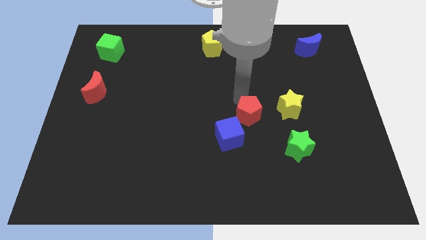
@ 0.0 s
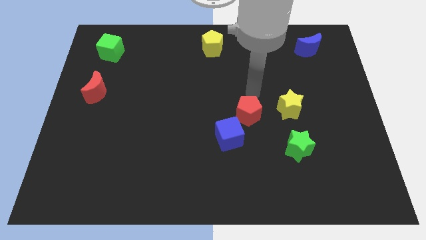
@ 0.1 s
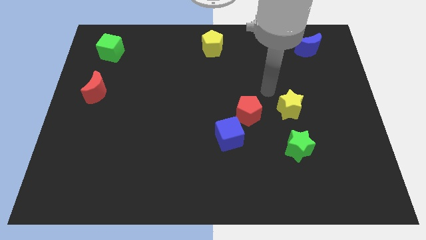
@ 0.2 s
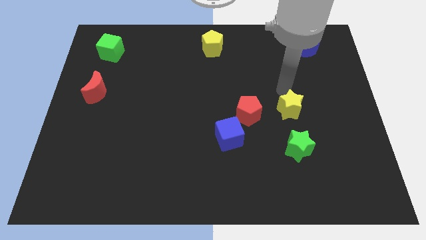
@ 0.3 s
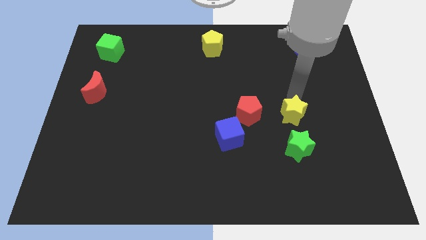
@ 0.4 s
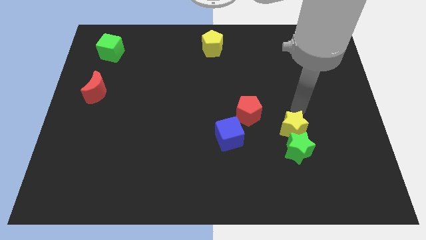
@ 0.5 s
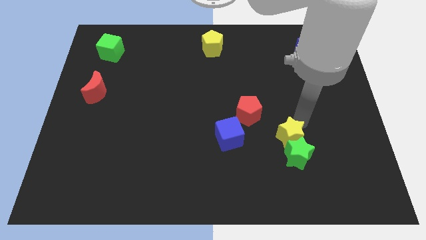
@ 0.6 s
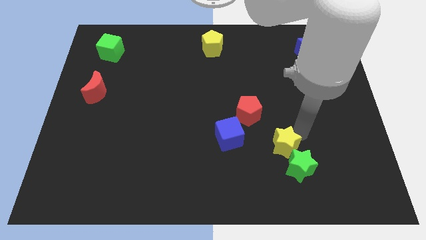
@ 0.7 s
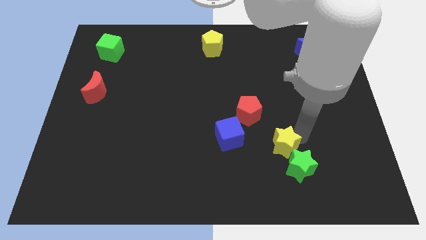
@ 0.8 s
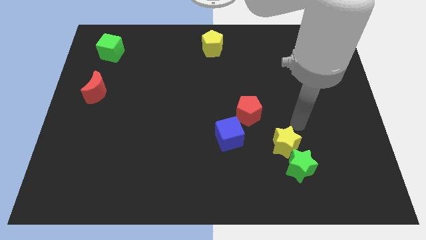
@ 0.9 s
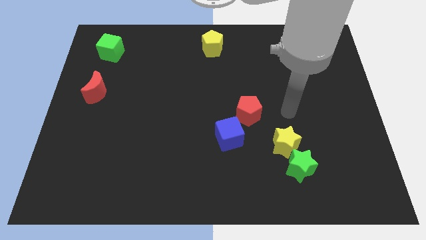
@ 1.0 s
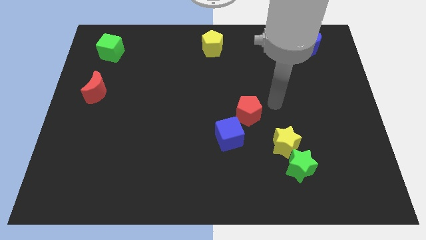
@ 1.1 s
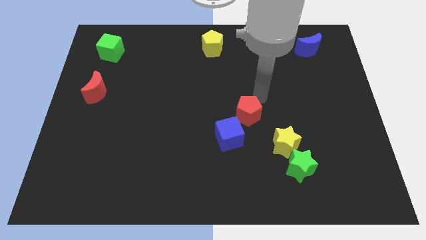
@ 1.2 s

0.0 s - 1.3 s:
move yellow star downwards

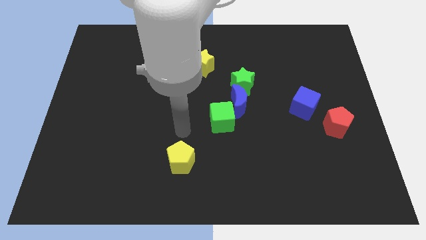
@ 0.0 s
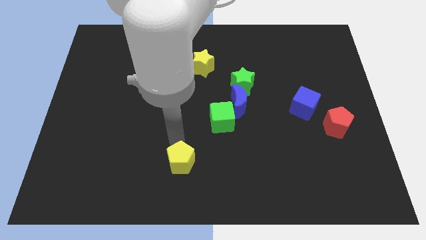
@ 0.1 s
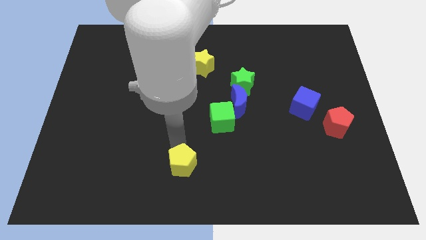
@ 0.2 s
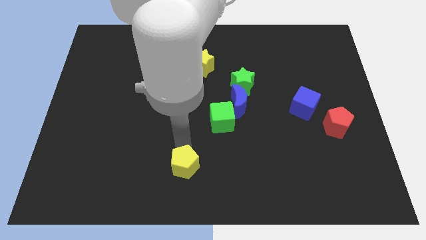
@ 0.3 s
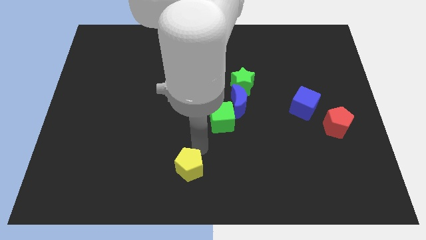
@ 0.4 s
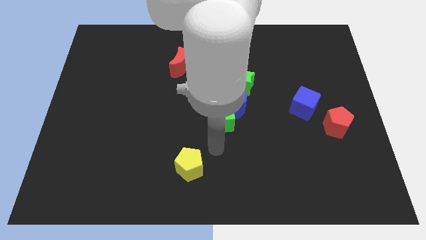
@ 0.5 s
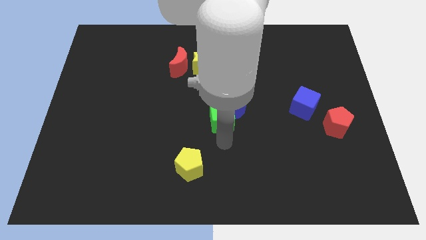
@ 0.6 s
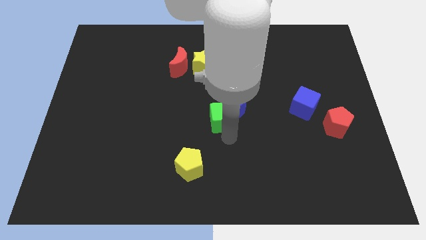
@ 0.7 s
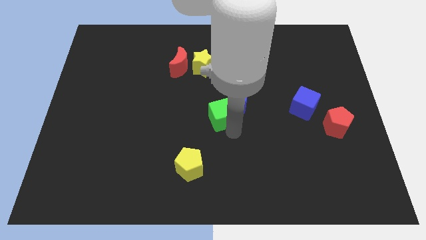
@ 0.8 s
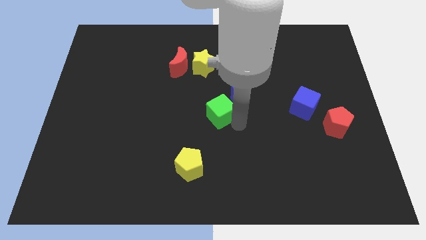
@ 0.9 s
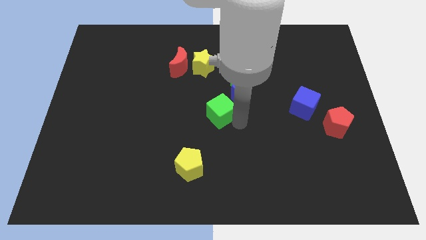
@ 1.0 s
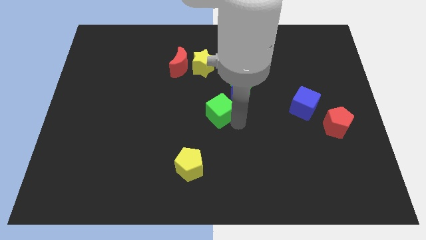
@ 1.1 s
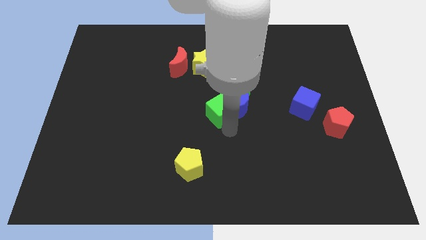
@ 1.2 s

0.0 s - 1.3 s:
push the blue moon with the green cube

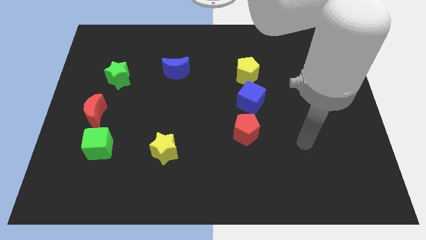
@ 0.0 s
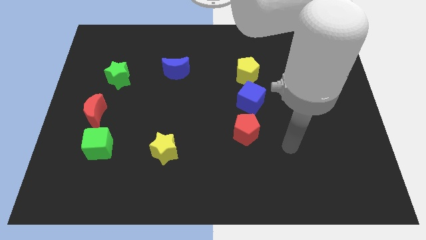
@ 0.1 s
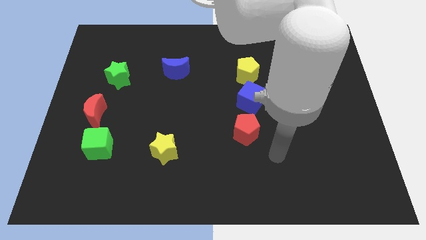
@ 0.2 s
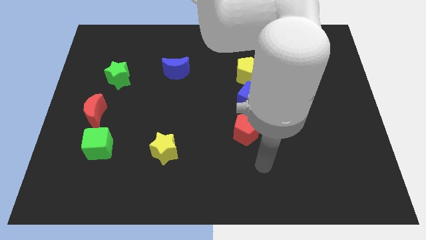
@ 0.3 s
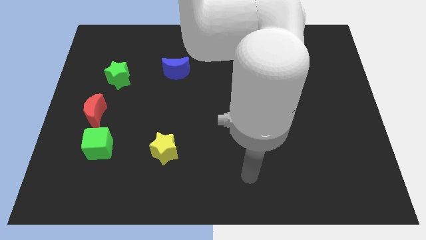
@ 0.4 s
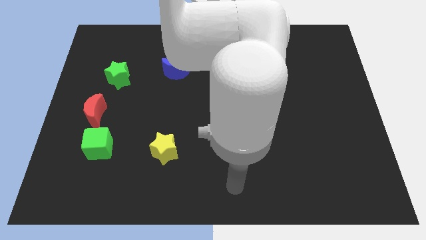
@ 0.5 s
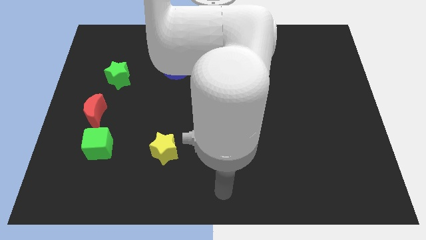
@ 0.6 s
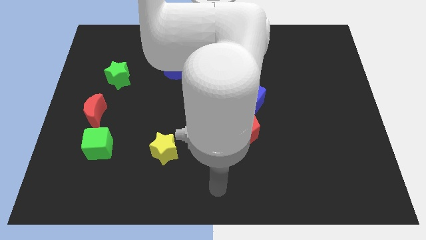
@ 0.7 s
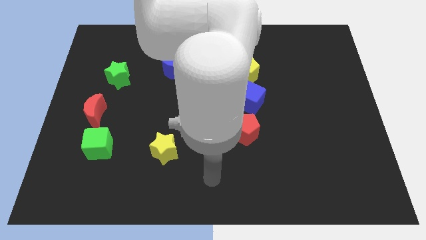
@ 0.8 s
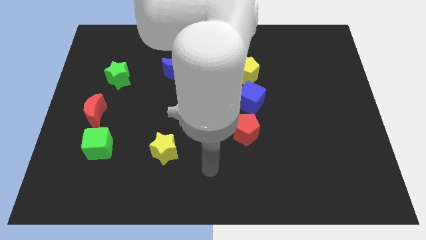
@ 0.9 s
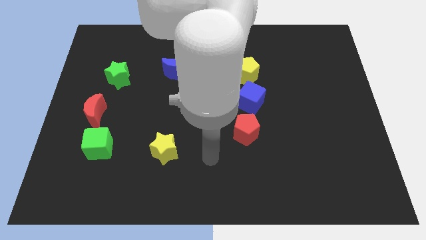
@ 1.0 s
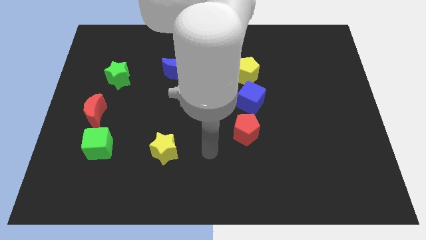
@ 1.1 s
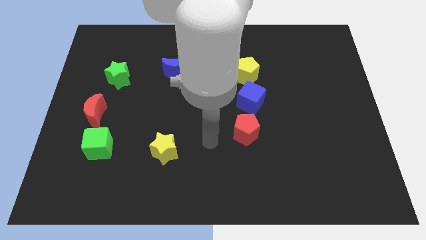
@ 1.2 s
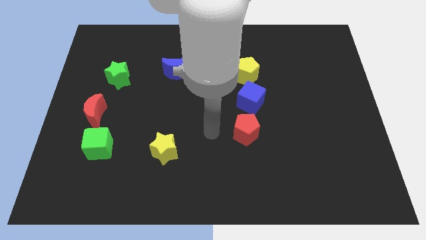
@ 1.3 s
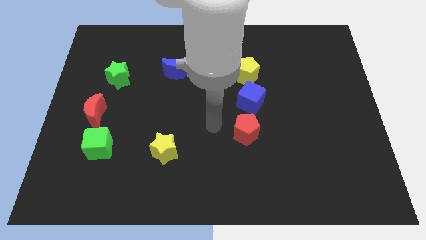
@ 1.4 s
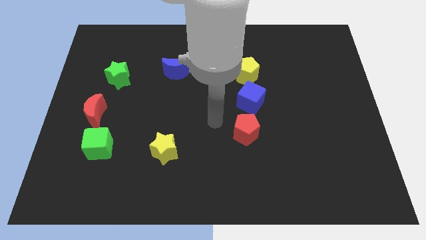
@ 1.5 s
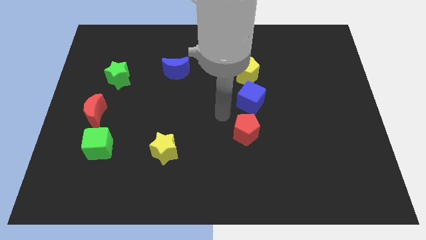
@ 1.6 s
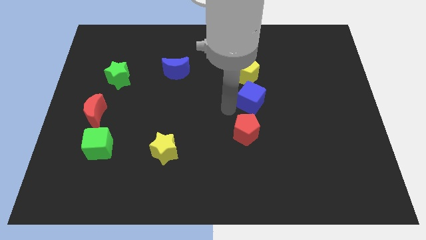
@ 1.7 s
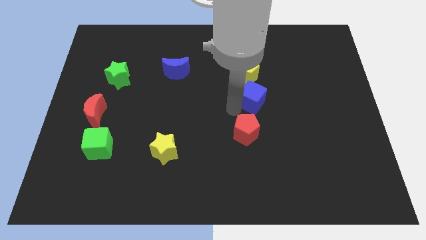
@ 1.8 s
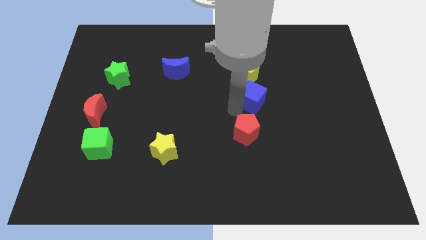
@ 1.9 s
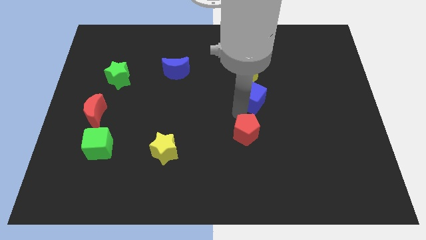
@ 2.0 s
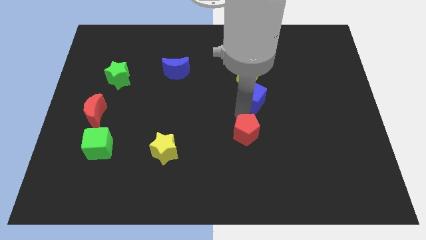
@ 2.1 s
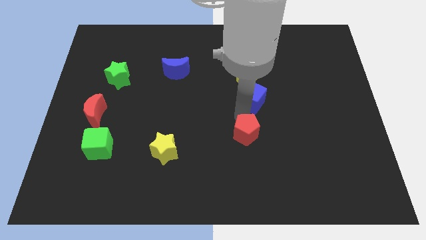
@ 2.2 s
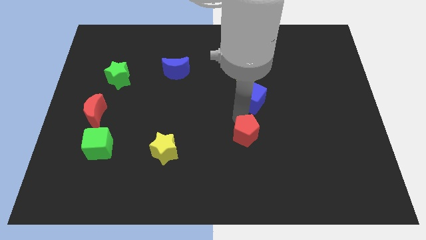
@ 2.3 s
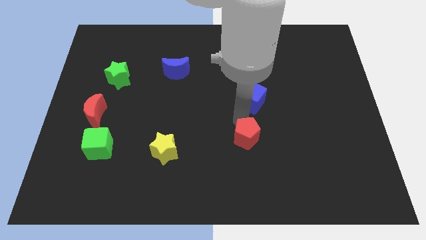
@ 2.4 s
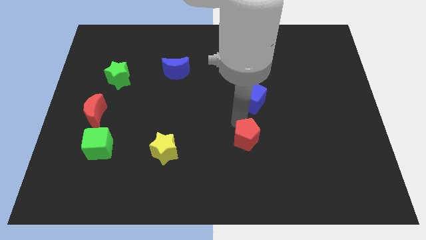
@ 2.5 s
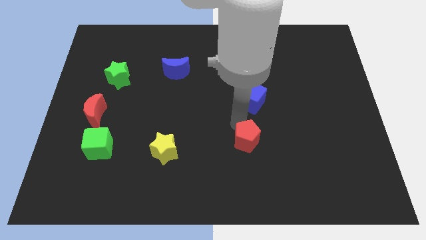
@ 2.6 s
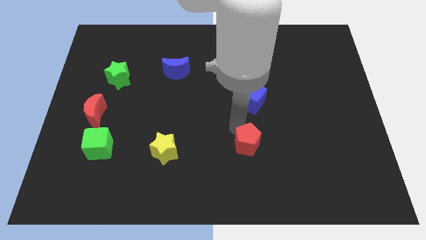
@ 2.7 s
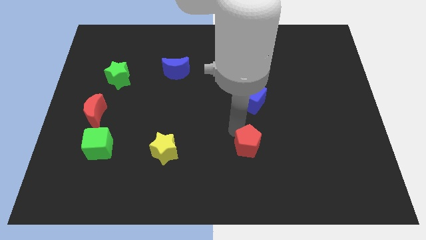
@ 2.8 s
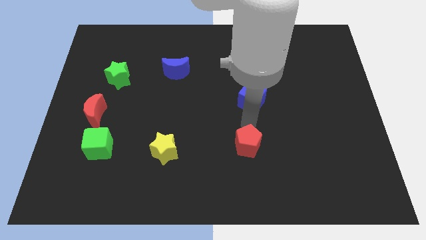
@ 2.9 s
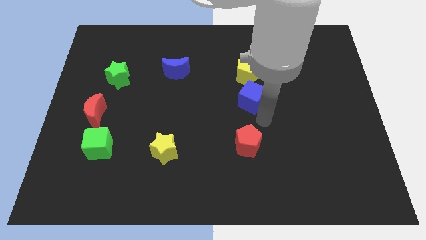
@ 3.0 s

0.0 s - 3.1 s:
place your arm in between the blue cube and red pentagon

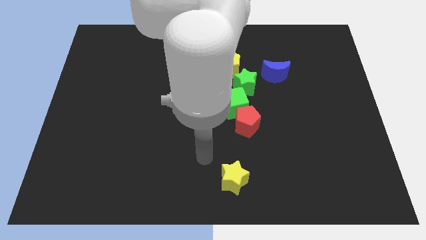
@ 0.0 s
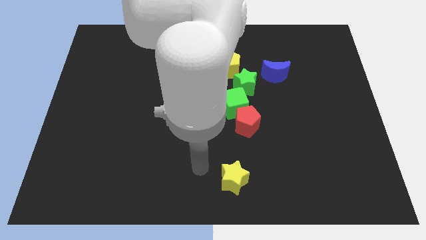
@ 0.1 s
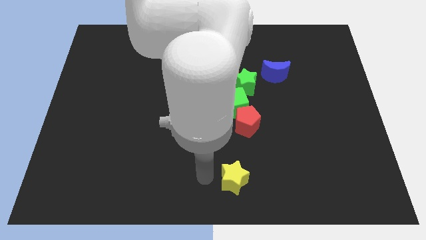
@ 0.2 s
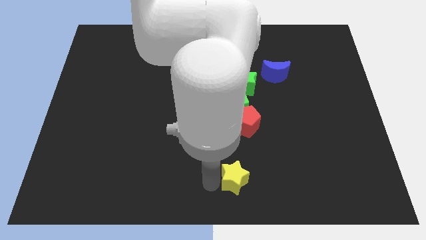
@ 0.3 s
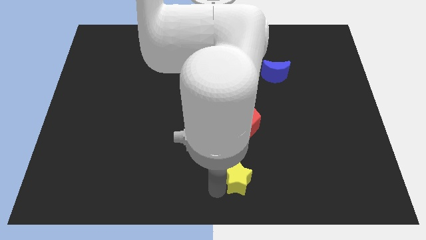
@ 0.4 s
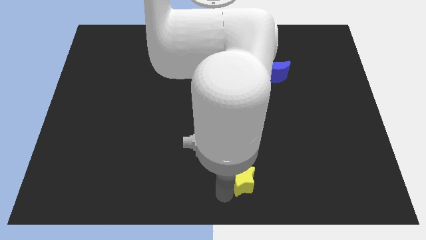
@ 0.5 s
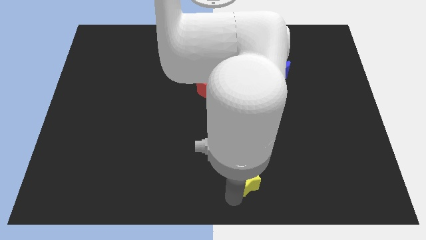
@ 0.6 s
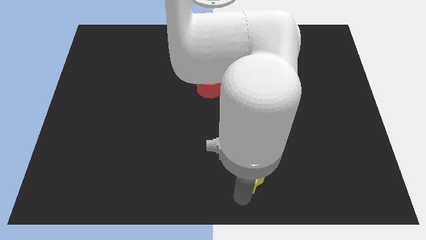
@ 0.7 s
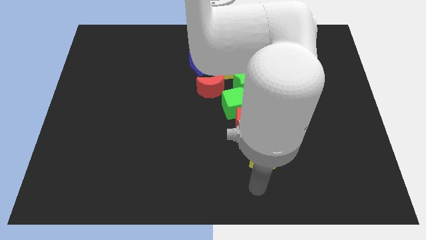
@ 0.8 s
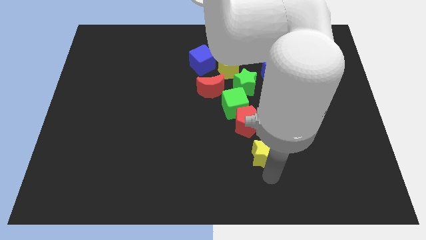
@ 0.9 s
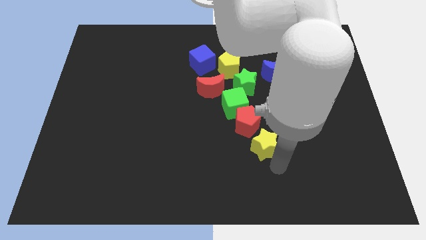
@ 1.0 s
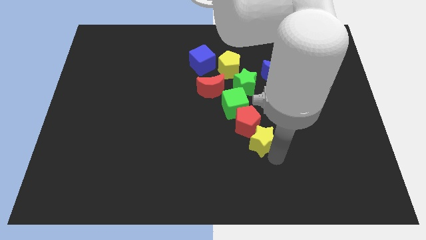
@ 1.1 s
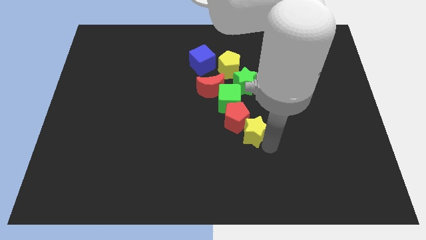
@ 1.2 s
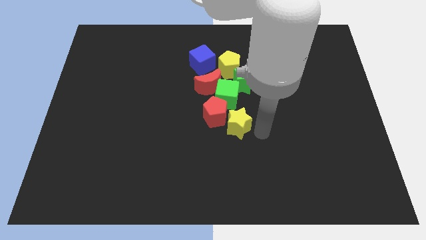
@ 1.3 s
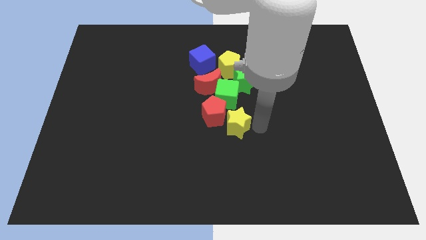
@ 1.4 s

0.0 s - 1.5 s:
move the yellow star into the red pentagon

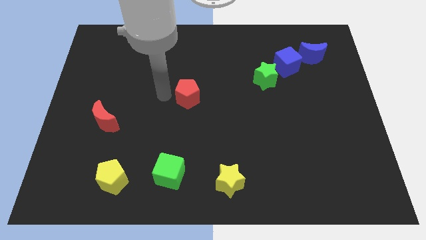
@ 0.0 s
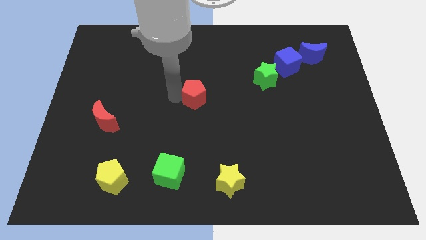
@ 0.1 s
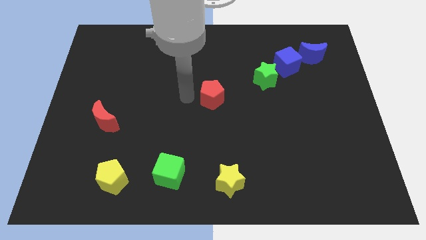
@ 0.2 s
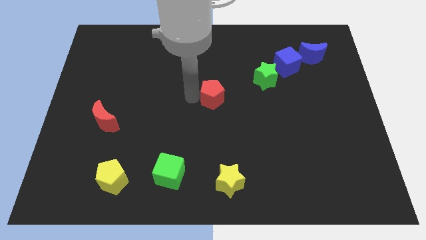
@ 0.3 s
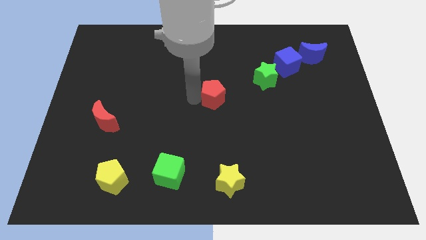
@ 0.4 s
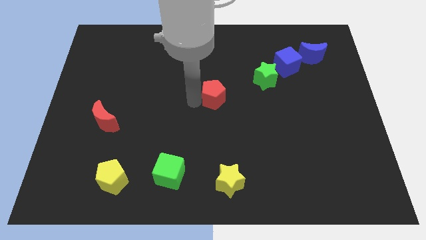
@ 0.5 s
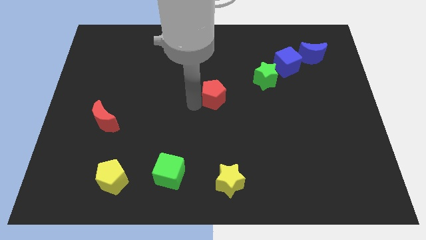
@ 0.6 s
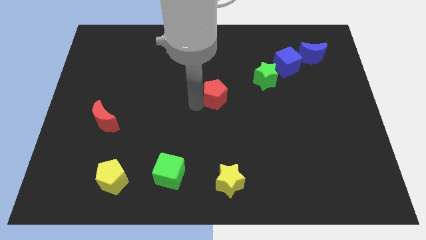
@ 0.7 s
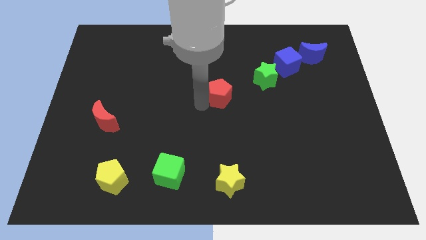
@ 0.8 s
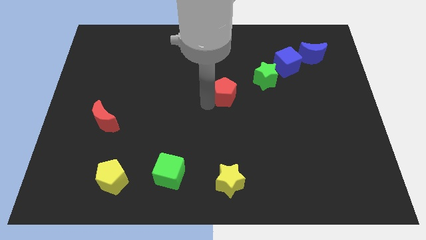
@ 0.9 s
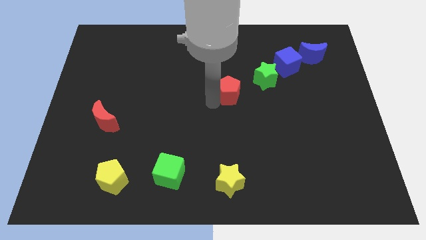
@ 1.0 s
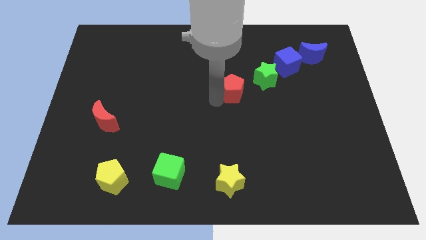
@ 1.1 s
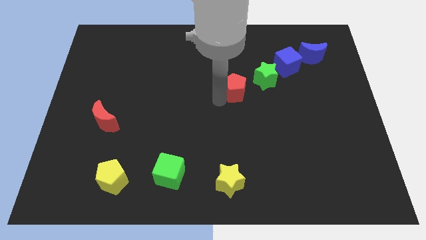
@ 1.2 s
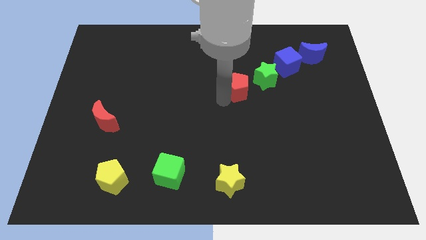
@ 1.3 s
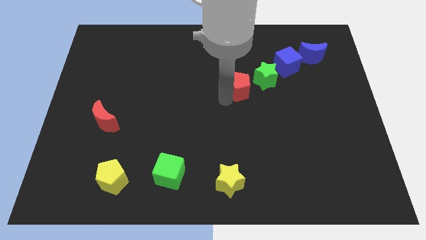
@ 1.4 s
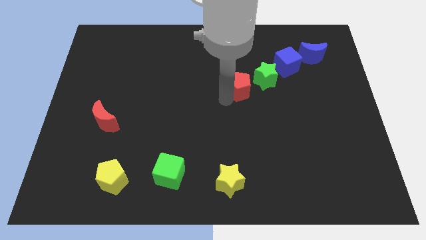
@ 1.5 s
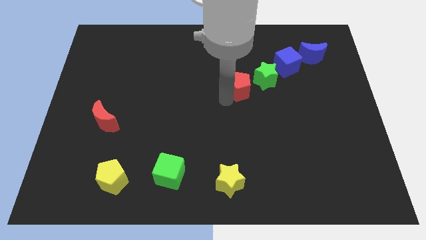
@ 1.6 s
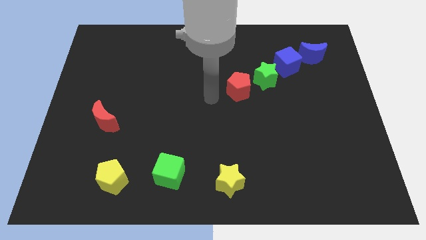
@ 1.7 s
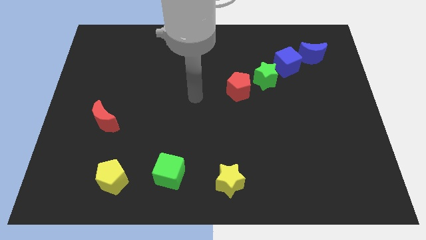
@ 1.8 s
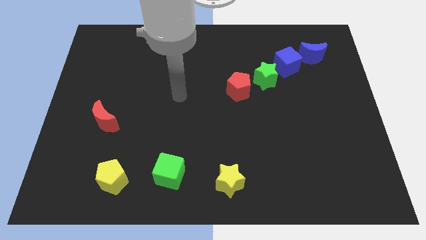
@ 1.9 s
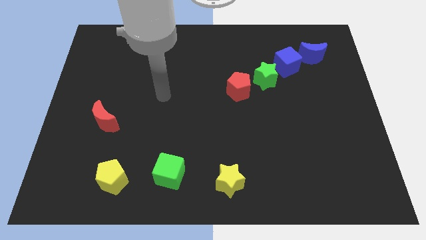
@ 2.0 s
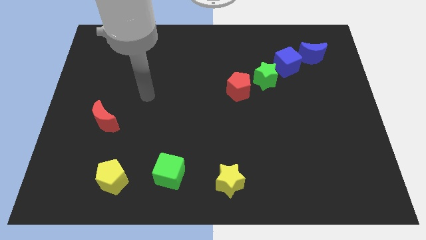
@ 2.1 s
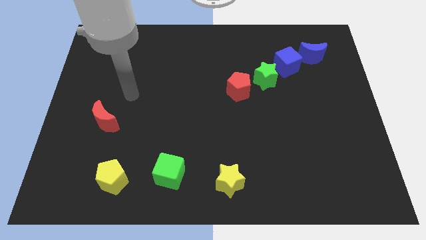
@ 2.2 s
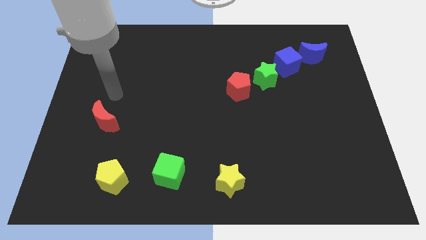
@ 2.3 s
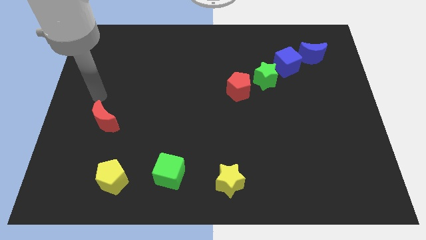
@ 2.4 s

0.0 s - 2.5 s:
move the red pentagon to the center
